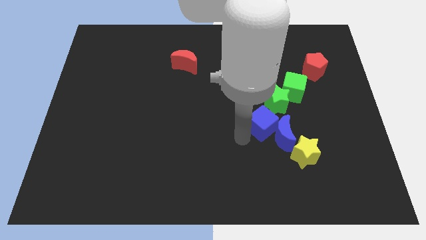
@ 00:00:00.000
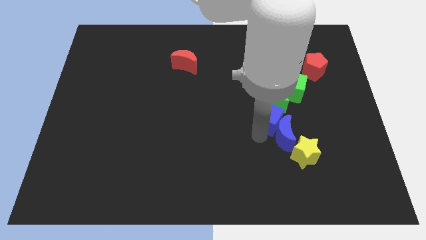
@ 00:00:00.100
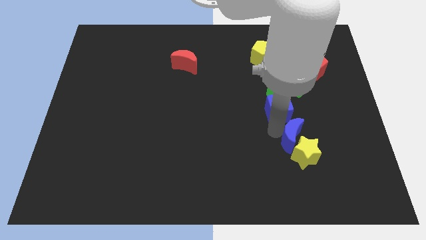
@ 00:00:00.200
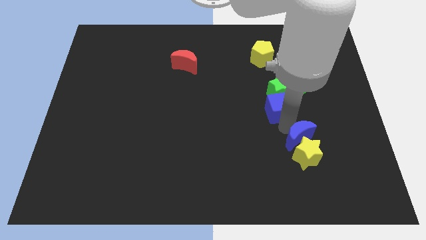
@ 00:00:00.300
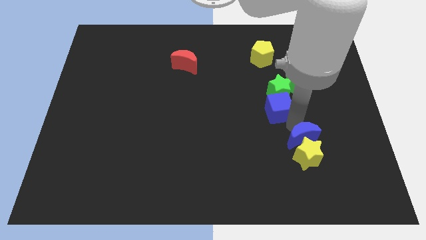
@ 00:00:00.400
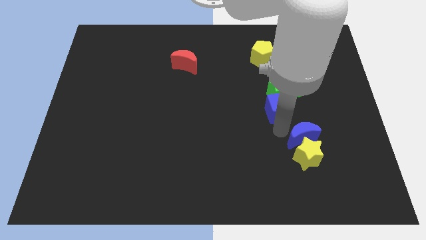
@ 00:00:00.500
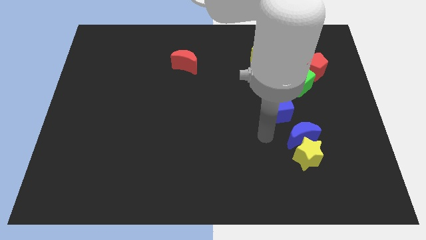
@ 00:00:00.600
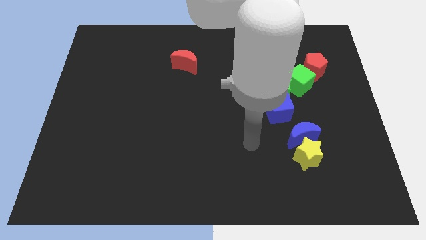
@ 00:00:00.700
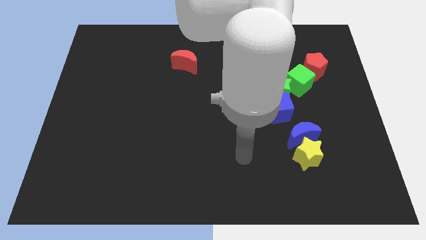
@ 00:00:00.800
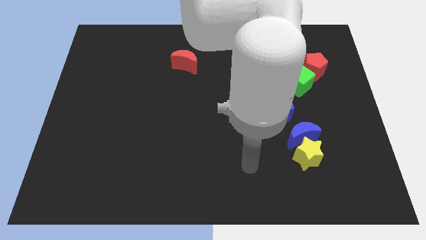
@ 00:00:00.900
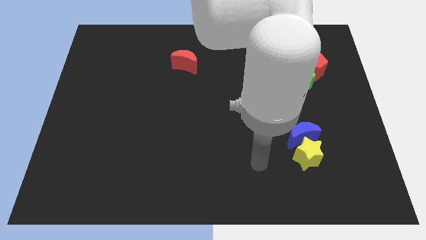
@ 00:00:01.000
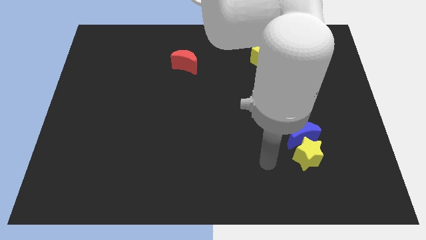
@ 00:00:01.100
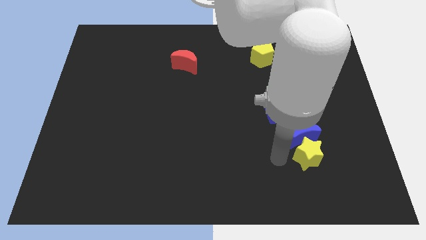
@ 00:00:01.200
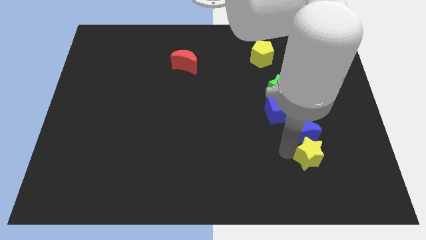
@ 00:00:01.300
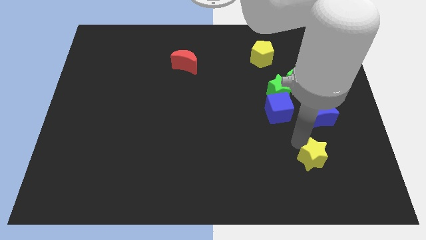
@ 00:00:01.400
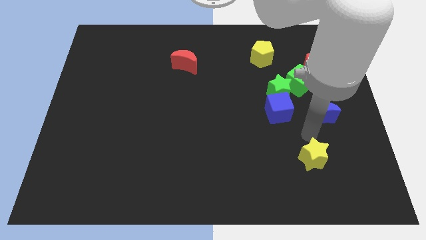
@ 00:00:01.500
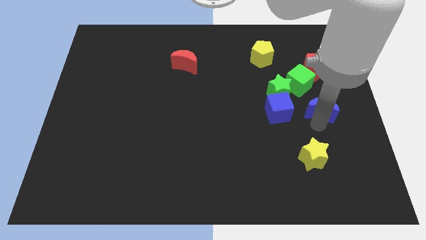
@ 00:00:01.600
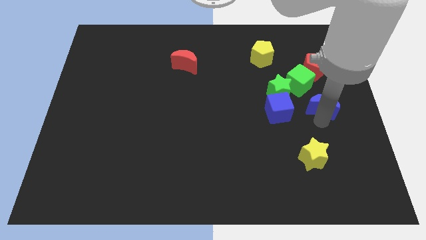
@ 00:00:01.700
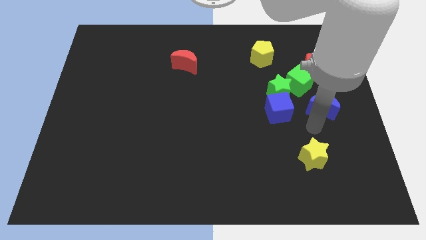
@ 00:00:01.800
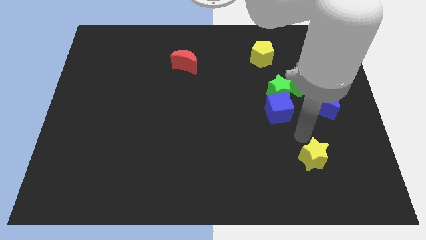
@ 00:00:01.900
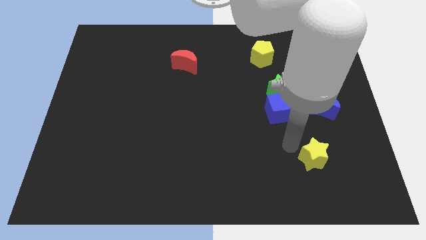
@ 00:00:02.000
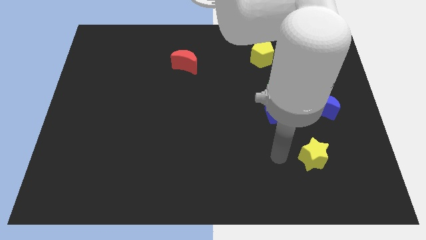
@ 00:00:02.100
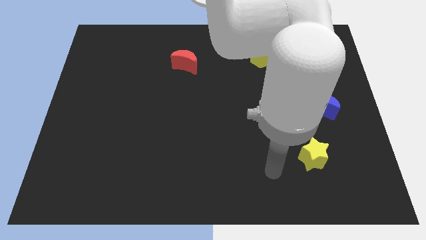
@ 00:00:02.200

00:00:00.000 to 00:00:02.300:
separate the blue moon from the yellow star

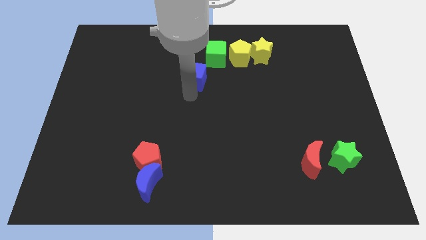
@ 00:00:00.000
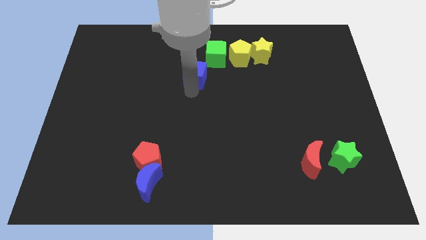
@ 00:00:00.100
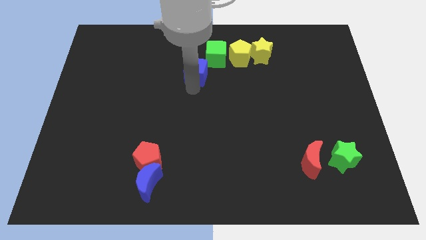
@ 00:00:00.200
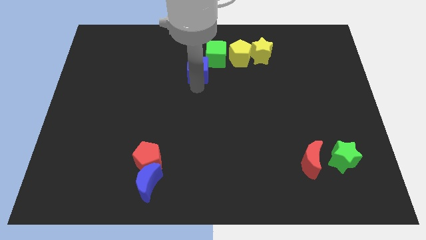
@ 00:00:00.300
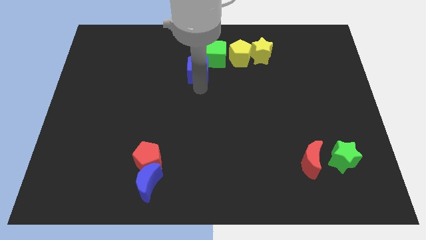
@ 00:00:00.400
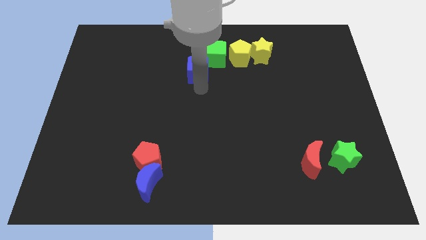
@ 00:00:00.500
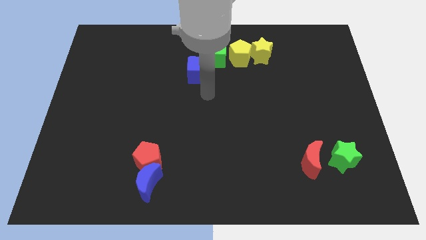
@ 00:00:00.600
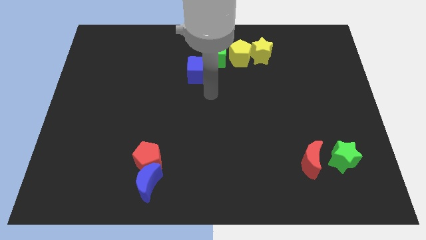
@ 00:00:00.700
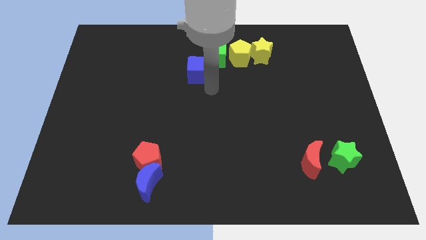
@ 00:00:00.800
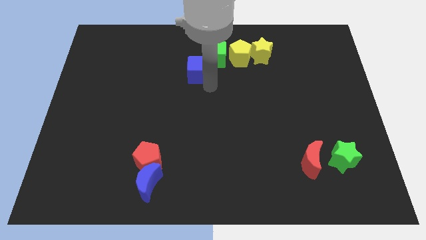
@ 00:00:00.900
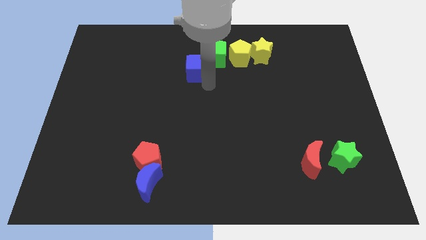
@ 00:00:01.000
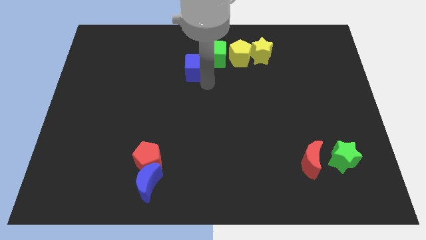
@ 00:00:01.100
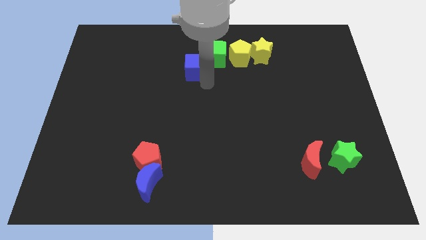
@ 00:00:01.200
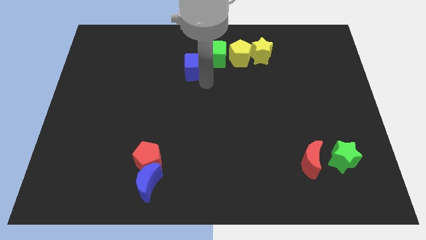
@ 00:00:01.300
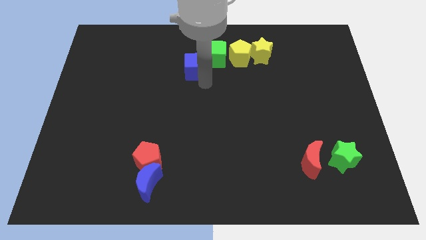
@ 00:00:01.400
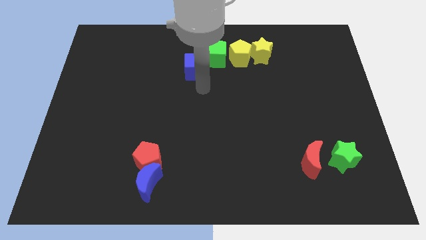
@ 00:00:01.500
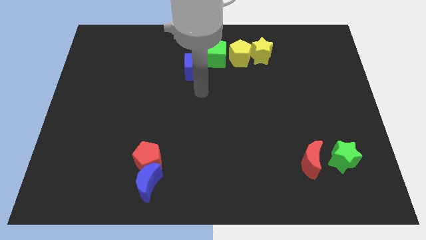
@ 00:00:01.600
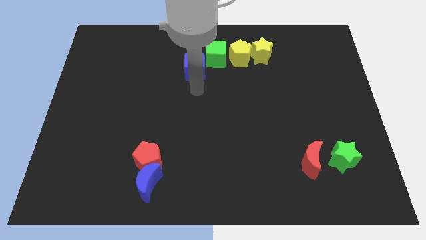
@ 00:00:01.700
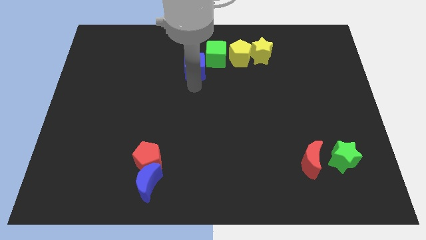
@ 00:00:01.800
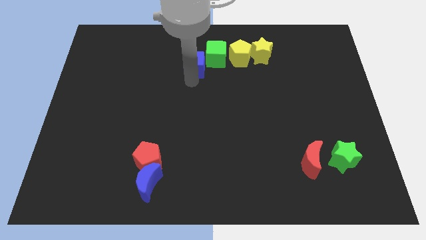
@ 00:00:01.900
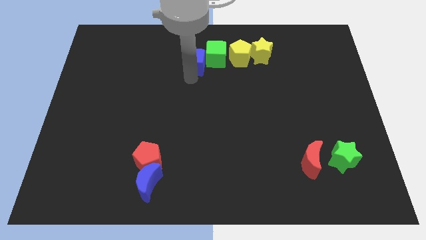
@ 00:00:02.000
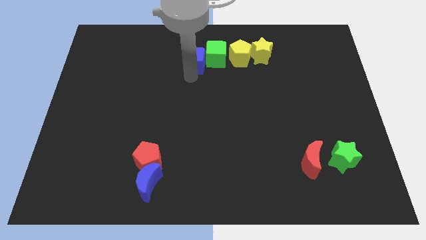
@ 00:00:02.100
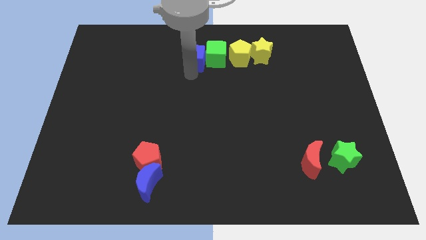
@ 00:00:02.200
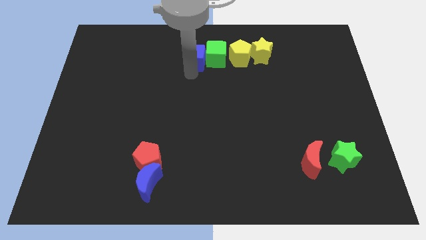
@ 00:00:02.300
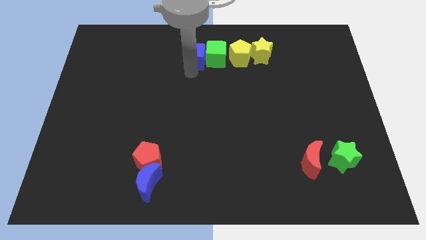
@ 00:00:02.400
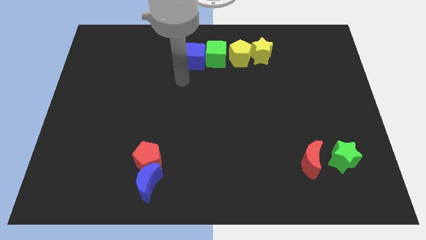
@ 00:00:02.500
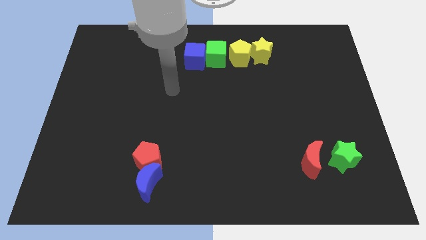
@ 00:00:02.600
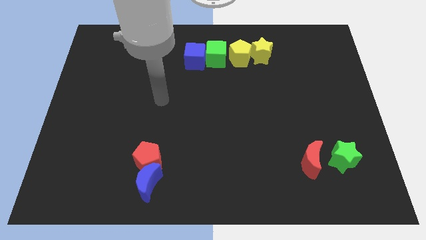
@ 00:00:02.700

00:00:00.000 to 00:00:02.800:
place the blue cube left to the green cube

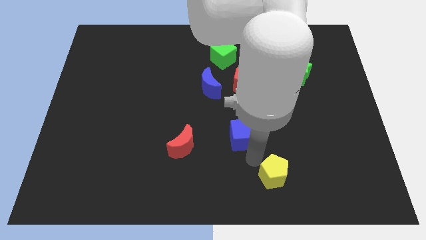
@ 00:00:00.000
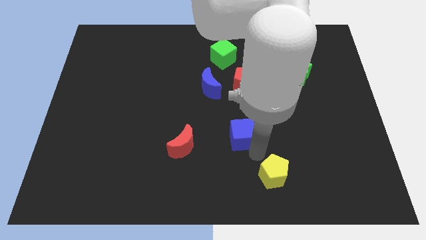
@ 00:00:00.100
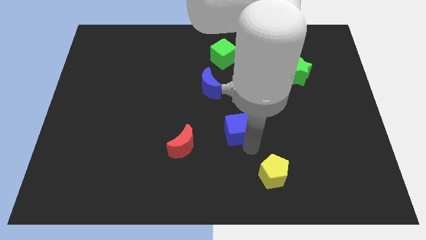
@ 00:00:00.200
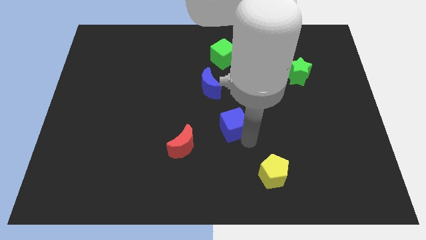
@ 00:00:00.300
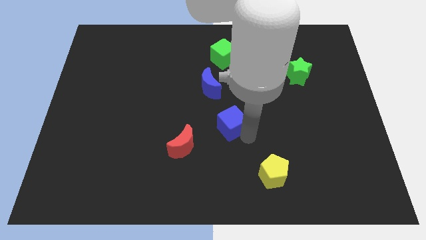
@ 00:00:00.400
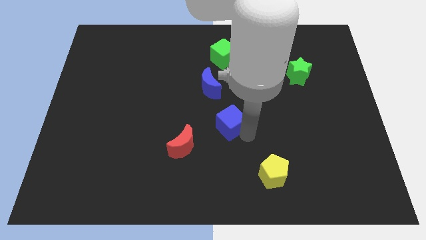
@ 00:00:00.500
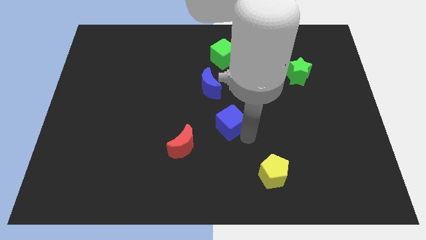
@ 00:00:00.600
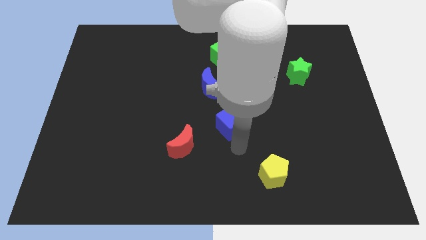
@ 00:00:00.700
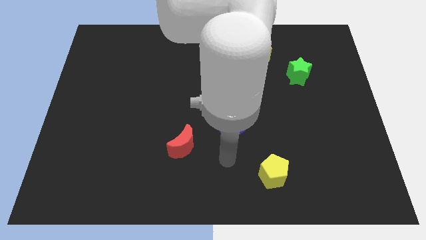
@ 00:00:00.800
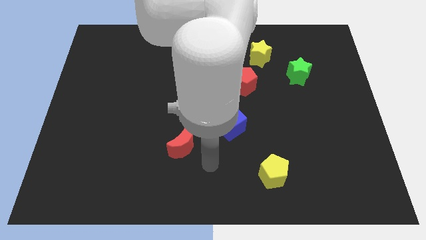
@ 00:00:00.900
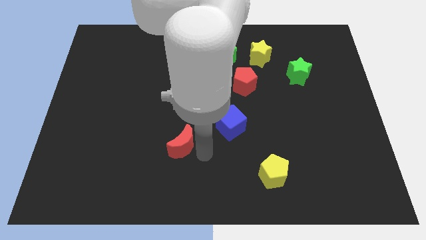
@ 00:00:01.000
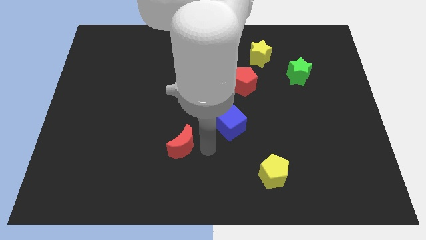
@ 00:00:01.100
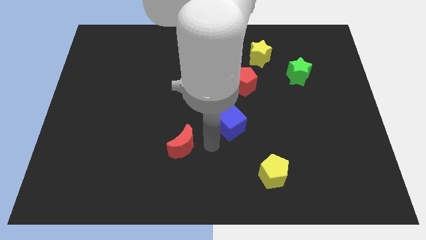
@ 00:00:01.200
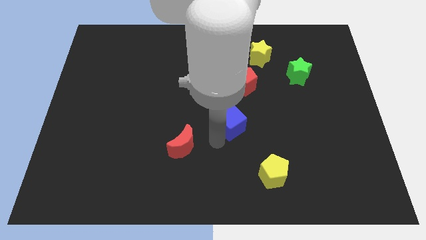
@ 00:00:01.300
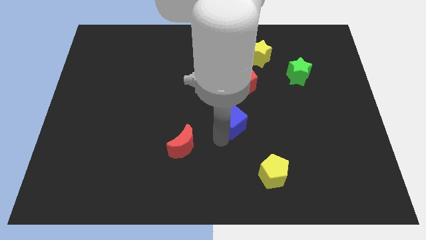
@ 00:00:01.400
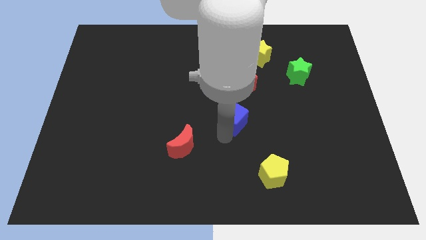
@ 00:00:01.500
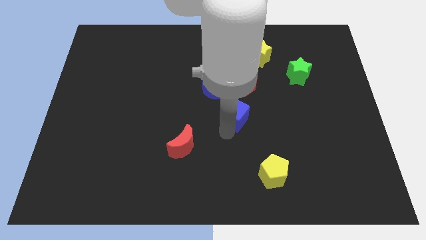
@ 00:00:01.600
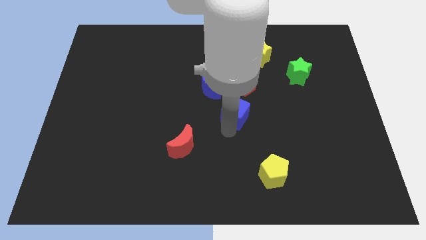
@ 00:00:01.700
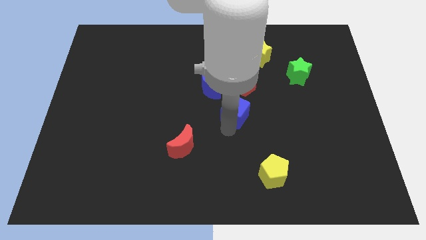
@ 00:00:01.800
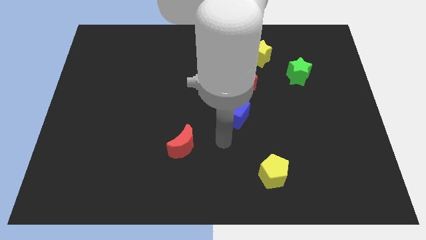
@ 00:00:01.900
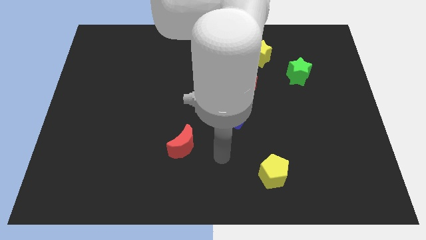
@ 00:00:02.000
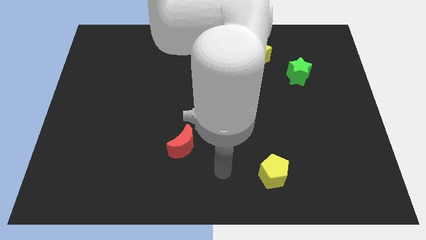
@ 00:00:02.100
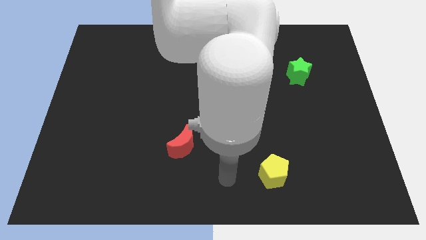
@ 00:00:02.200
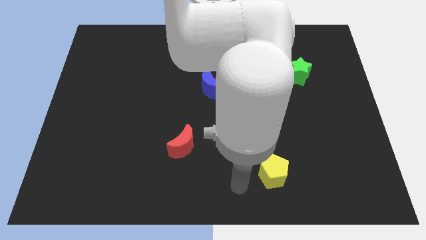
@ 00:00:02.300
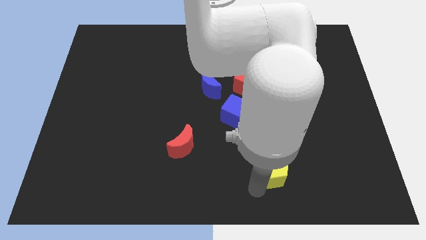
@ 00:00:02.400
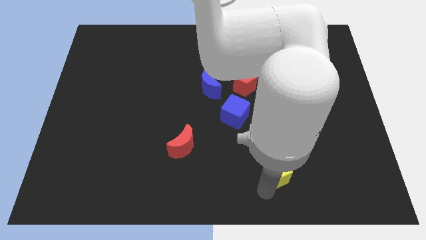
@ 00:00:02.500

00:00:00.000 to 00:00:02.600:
place the blue cube below the red pentagon

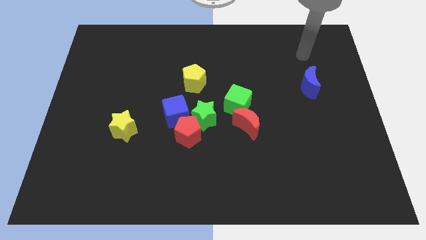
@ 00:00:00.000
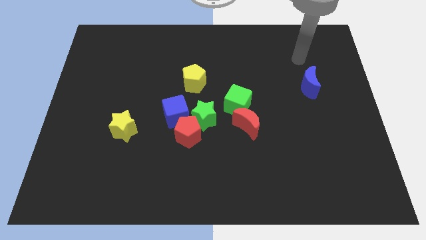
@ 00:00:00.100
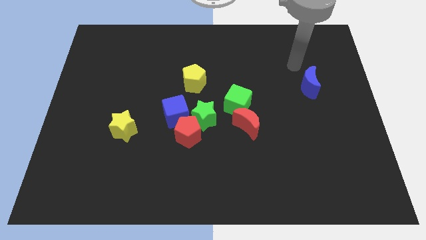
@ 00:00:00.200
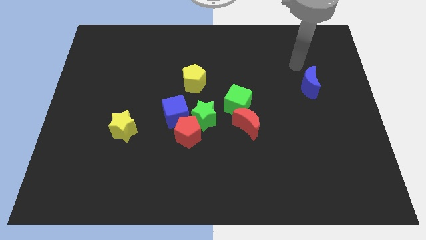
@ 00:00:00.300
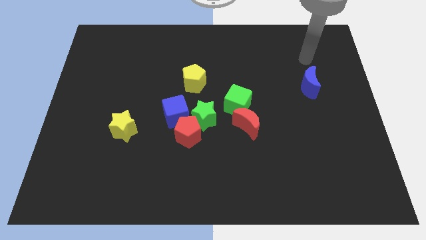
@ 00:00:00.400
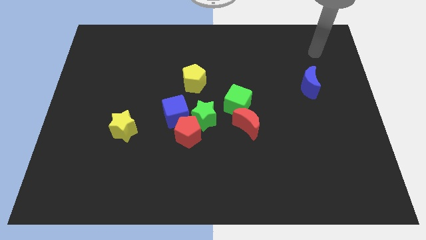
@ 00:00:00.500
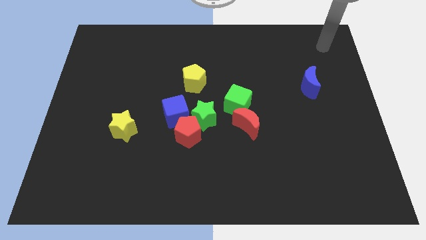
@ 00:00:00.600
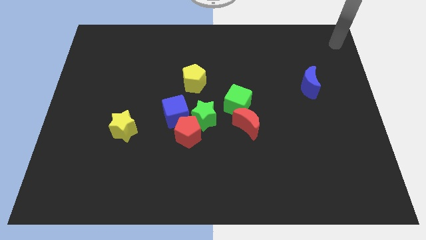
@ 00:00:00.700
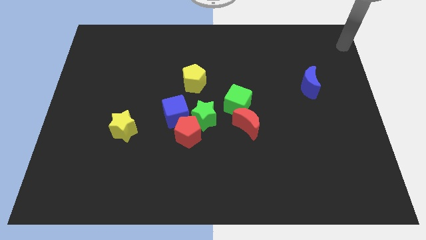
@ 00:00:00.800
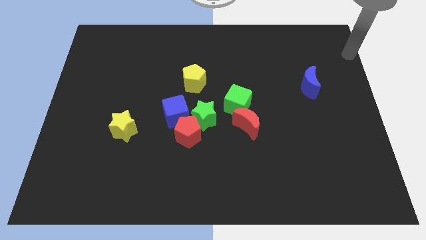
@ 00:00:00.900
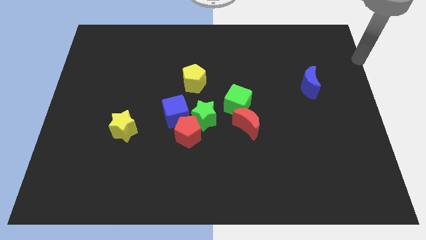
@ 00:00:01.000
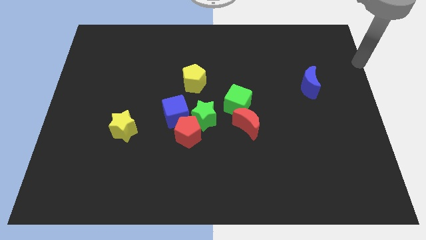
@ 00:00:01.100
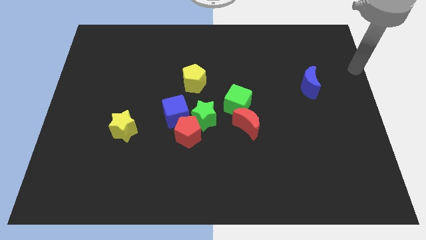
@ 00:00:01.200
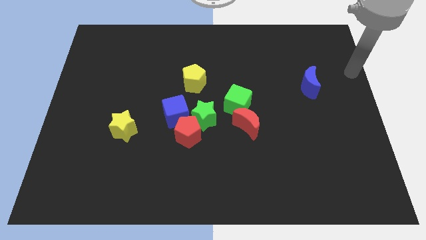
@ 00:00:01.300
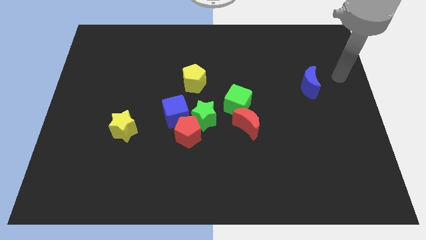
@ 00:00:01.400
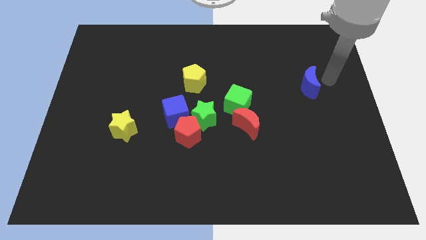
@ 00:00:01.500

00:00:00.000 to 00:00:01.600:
move the arm to the right of blue moon
